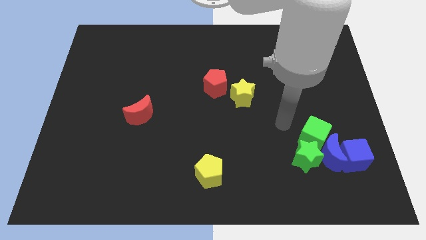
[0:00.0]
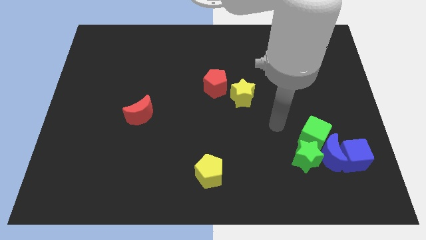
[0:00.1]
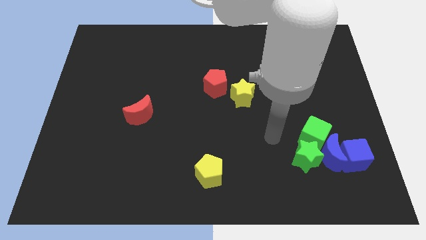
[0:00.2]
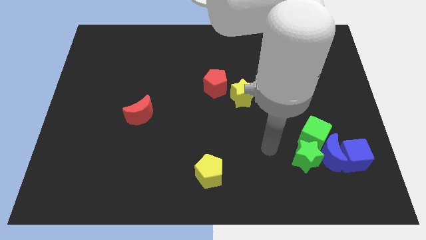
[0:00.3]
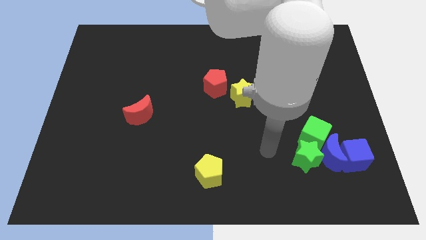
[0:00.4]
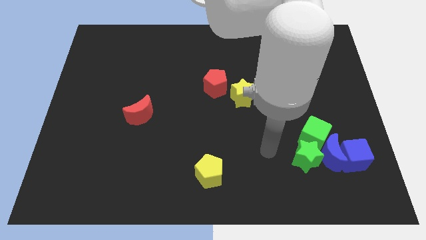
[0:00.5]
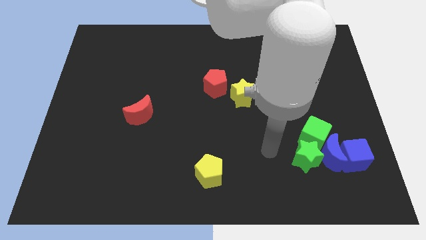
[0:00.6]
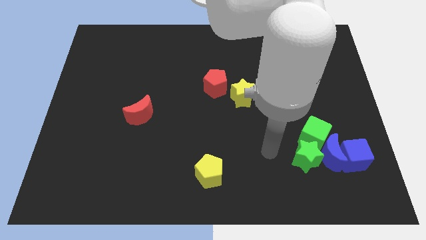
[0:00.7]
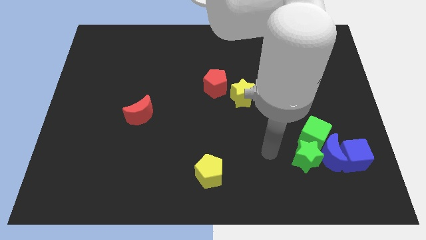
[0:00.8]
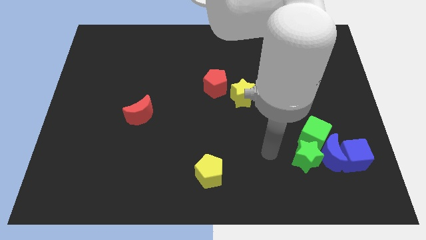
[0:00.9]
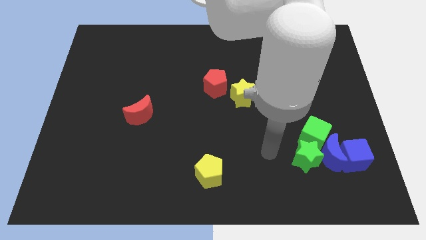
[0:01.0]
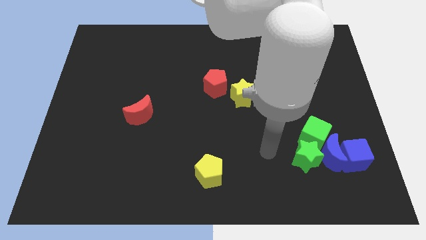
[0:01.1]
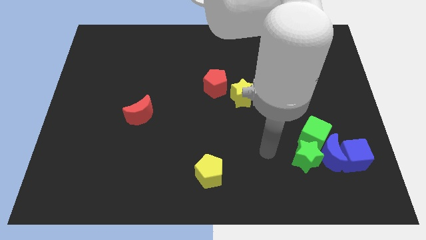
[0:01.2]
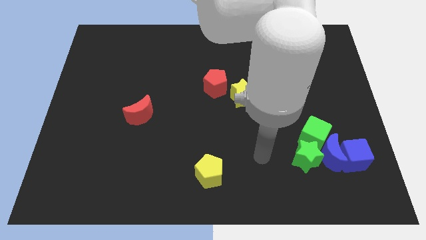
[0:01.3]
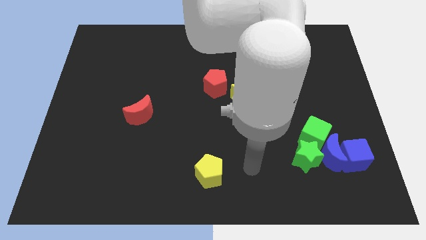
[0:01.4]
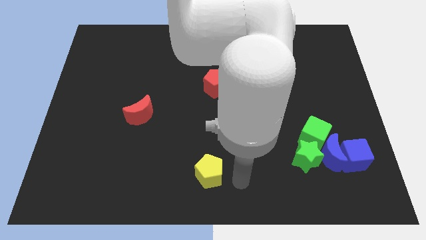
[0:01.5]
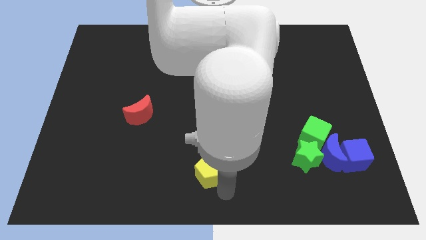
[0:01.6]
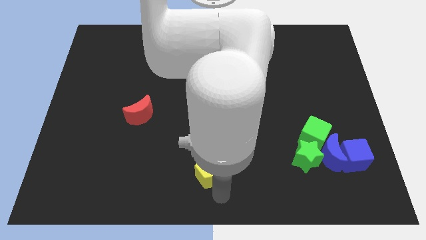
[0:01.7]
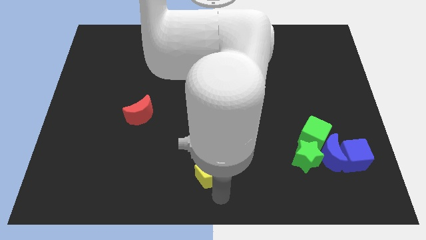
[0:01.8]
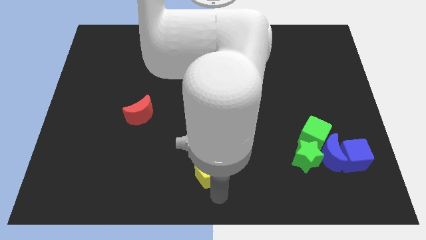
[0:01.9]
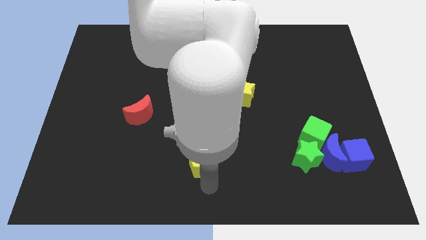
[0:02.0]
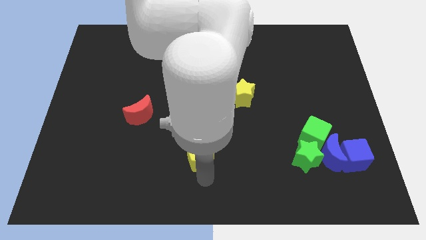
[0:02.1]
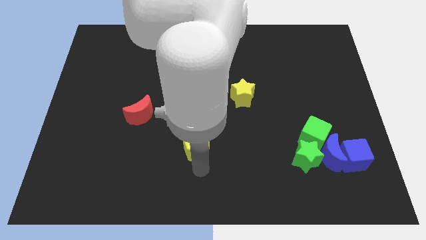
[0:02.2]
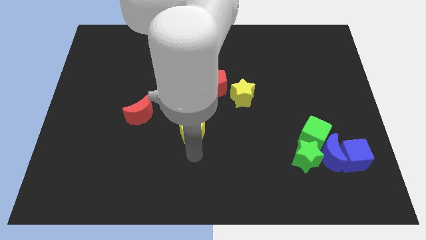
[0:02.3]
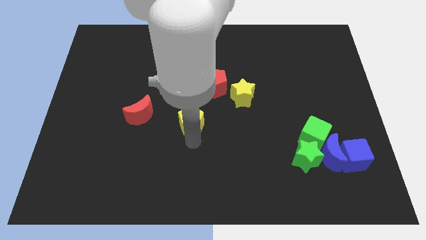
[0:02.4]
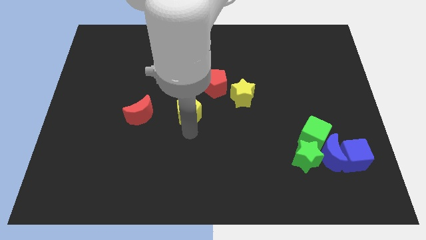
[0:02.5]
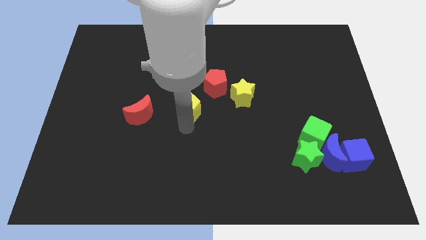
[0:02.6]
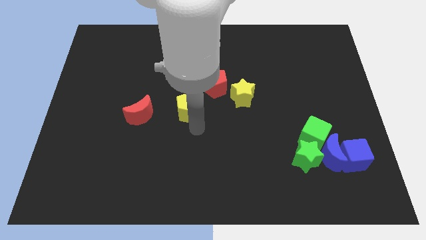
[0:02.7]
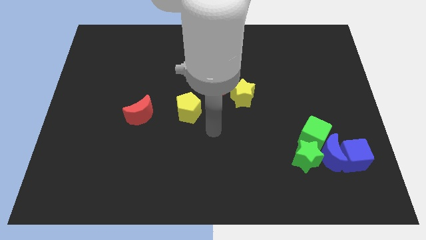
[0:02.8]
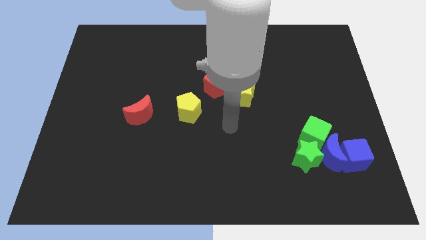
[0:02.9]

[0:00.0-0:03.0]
push the yellow pentagon upward

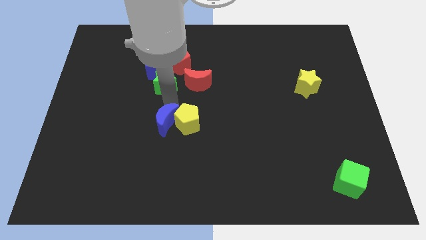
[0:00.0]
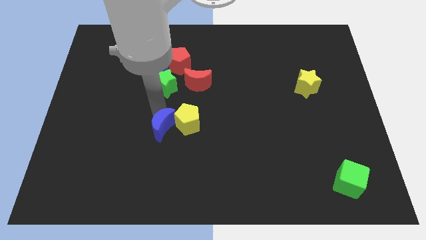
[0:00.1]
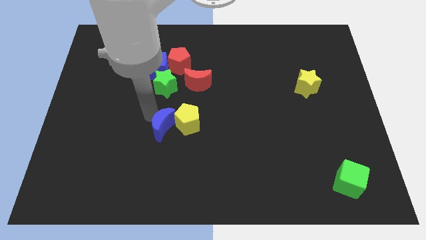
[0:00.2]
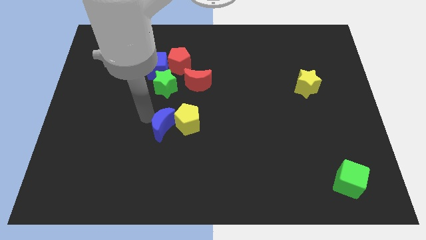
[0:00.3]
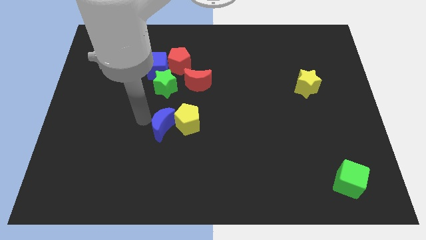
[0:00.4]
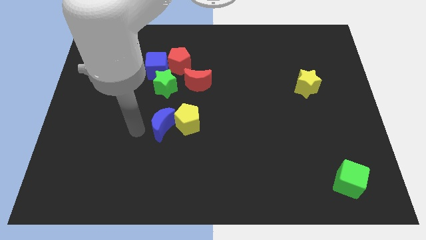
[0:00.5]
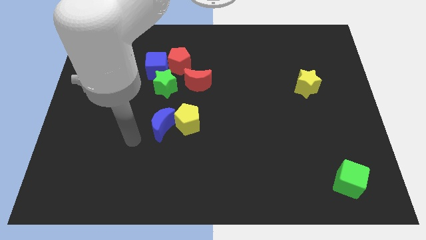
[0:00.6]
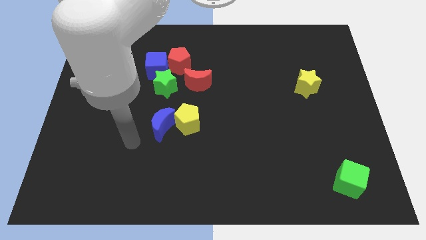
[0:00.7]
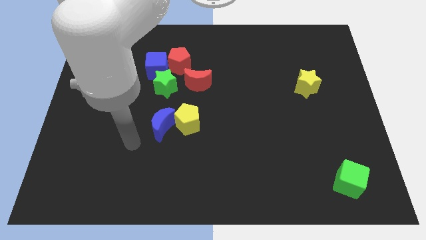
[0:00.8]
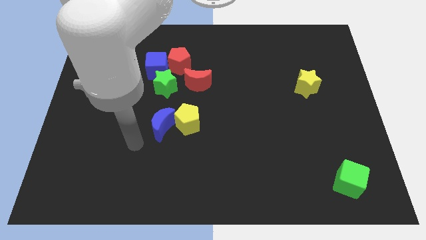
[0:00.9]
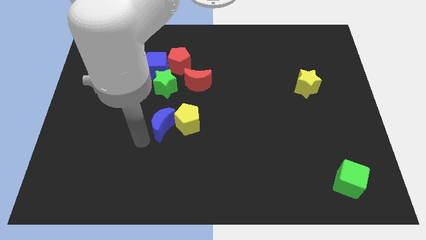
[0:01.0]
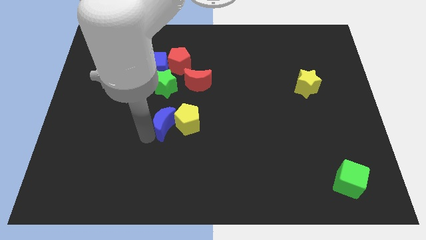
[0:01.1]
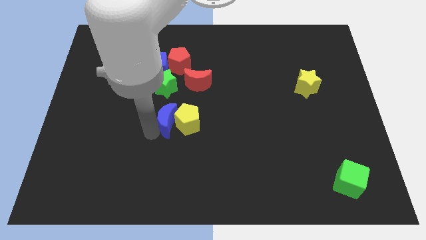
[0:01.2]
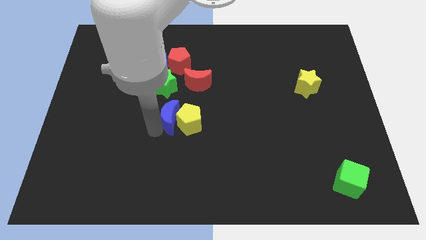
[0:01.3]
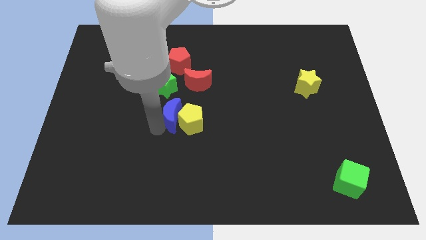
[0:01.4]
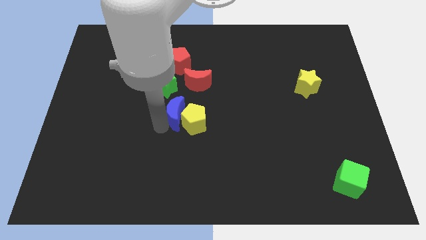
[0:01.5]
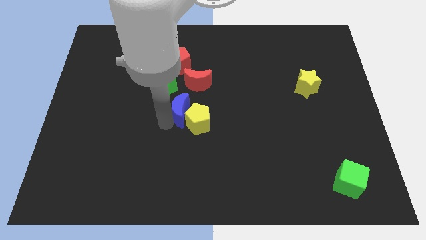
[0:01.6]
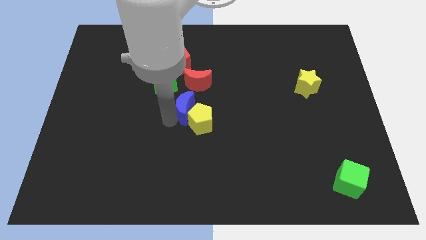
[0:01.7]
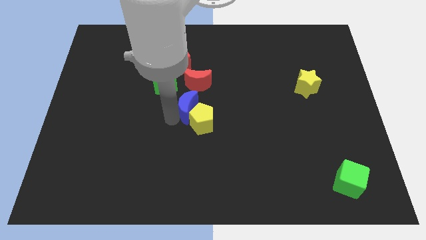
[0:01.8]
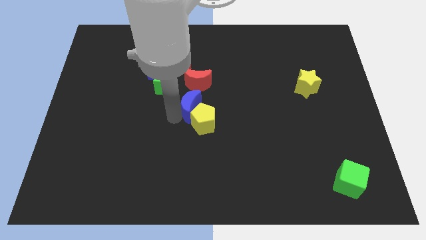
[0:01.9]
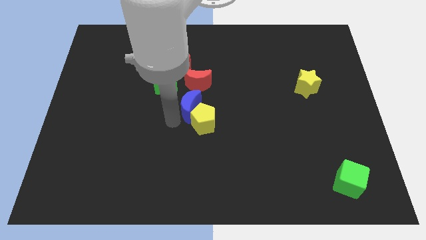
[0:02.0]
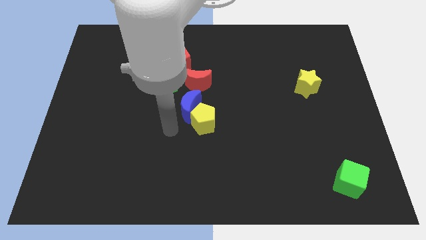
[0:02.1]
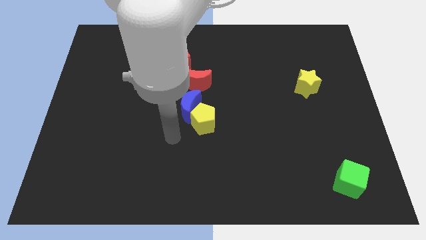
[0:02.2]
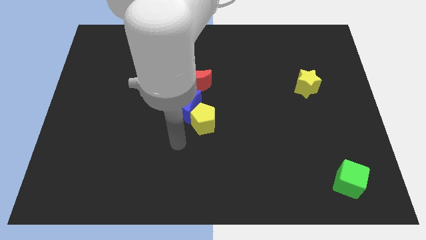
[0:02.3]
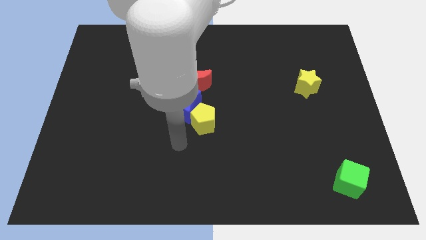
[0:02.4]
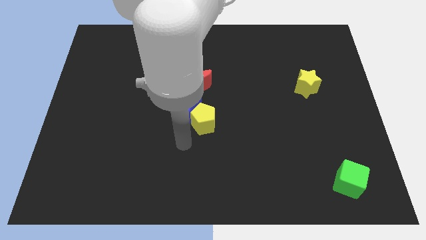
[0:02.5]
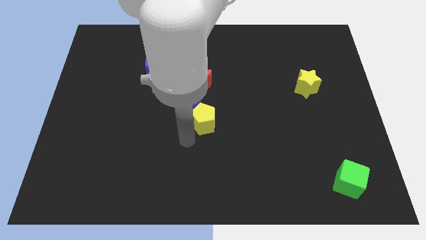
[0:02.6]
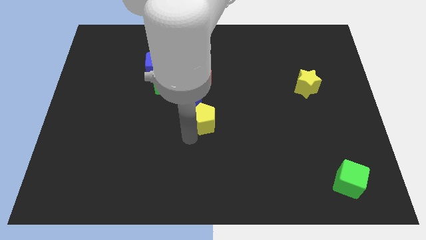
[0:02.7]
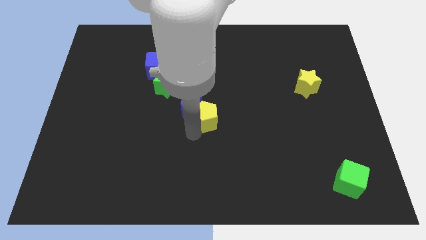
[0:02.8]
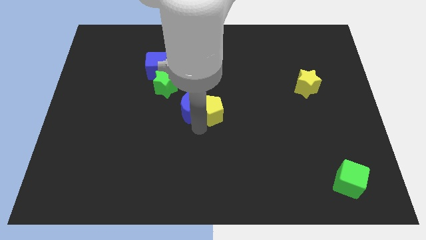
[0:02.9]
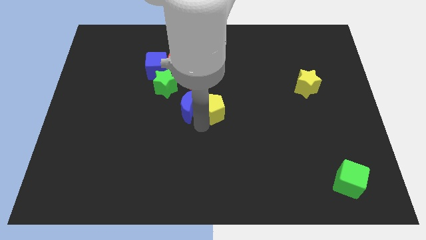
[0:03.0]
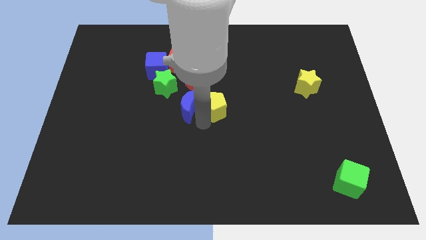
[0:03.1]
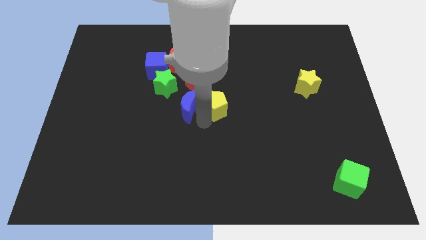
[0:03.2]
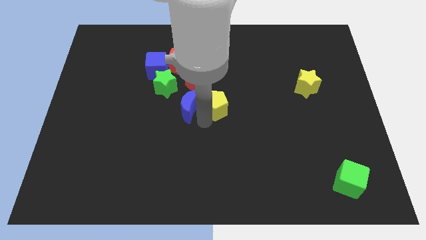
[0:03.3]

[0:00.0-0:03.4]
push the blue moon and yellow pentagon to the center of the board

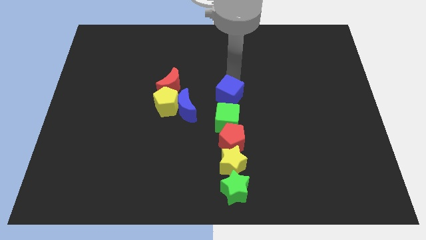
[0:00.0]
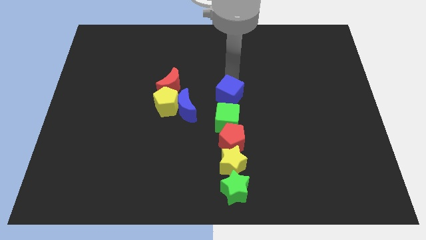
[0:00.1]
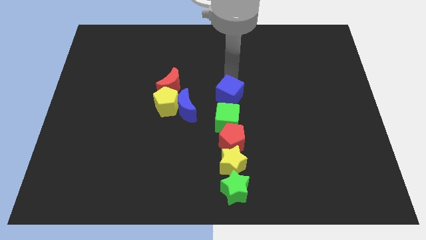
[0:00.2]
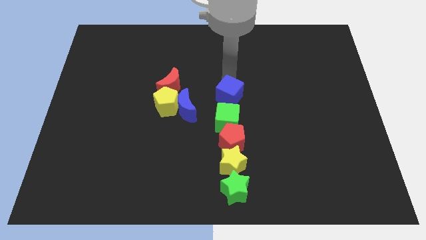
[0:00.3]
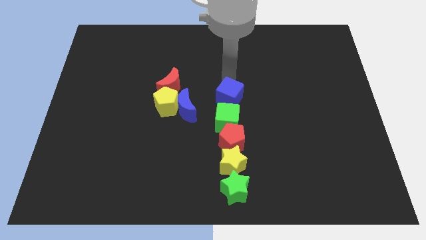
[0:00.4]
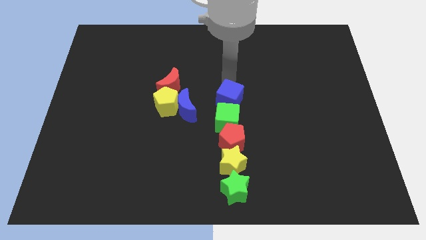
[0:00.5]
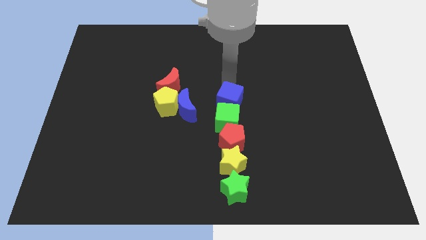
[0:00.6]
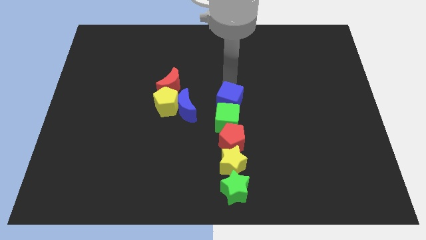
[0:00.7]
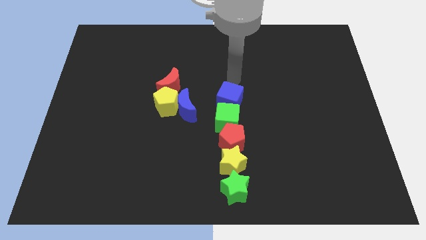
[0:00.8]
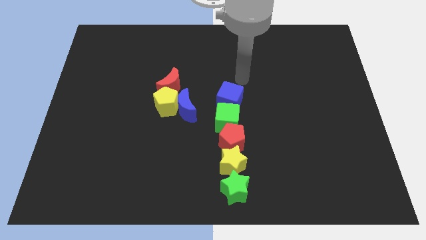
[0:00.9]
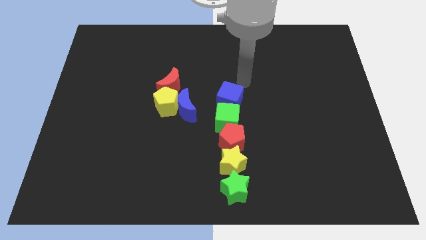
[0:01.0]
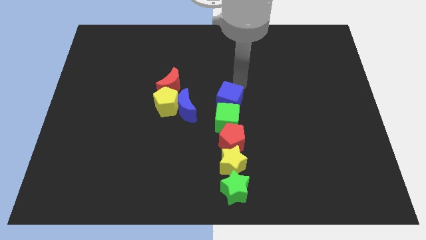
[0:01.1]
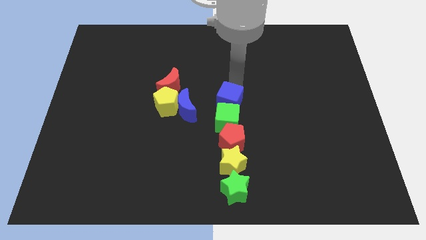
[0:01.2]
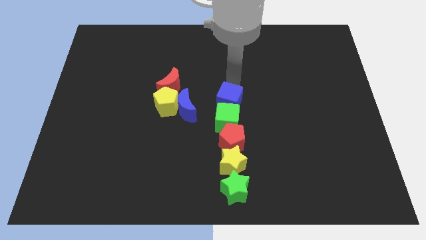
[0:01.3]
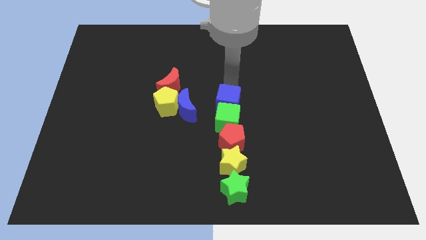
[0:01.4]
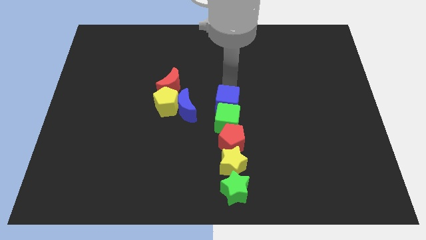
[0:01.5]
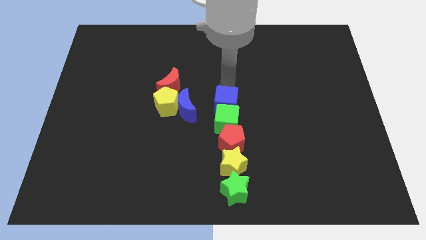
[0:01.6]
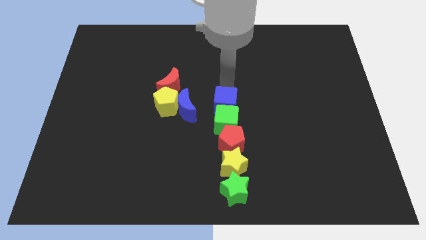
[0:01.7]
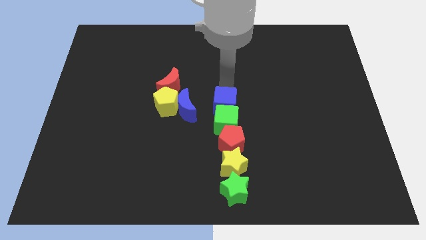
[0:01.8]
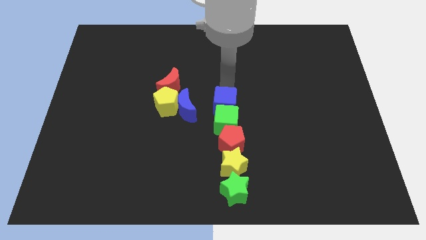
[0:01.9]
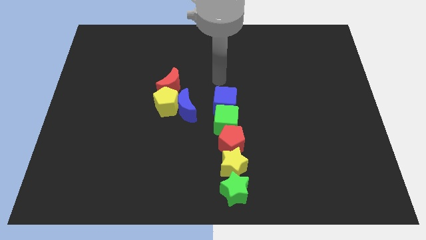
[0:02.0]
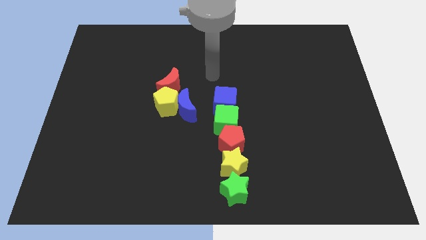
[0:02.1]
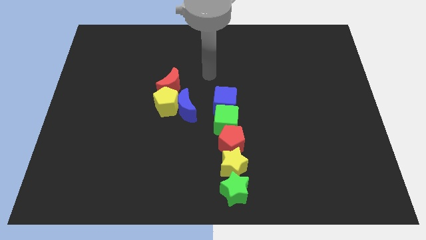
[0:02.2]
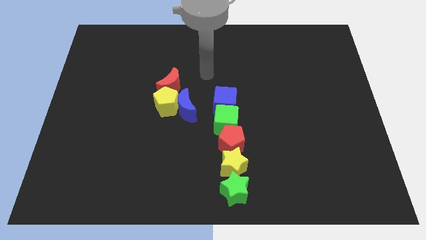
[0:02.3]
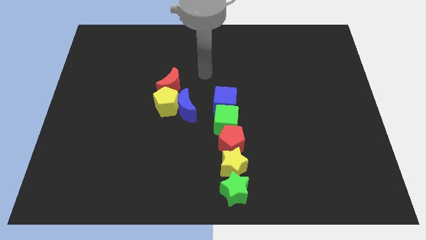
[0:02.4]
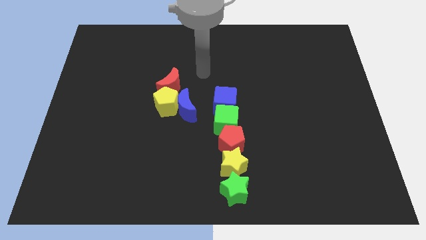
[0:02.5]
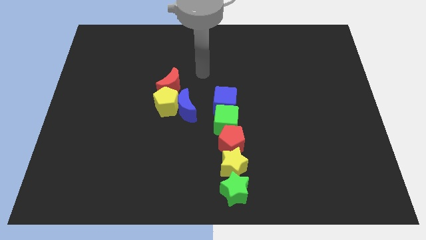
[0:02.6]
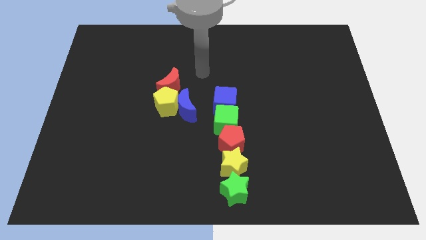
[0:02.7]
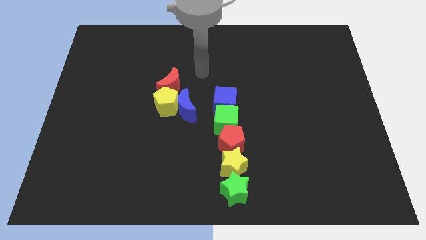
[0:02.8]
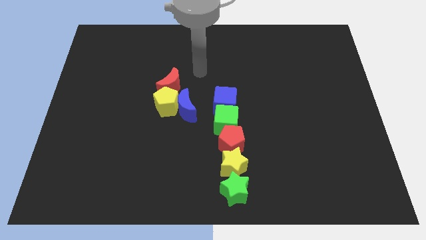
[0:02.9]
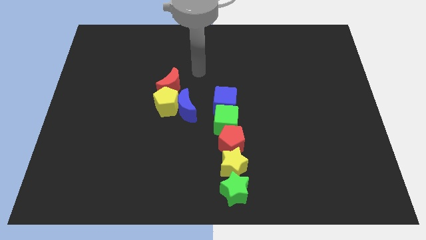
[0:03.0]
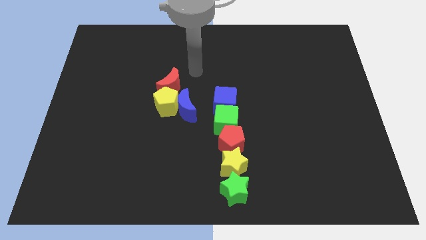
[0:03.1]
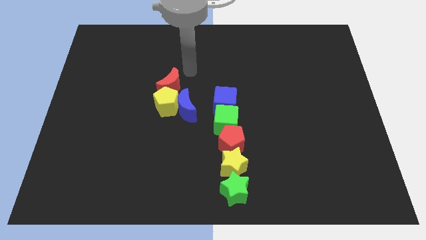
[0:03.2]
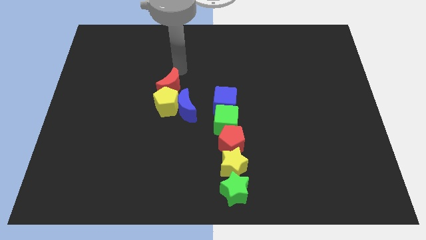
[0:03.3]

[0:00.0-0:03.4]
push the blue cube slightly into the green cube
